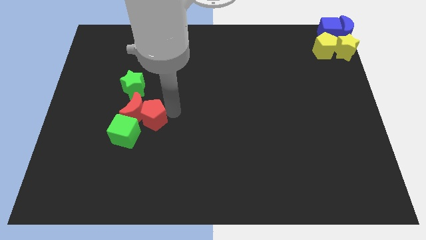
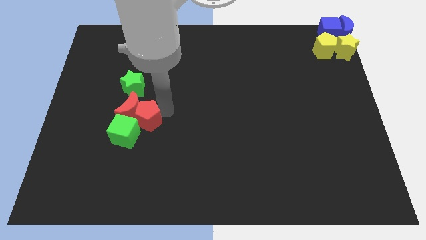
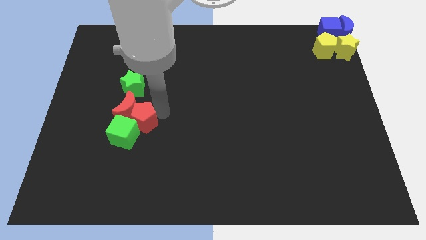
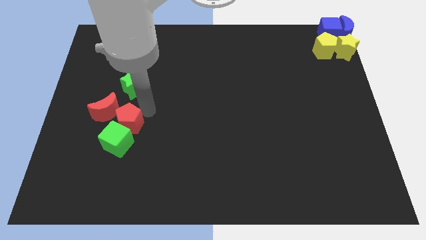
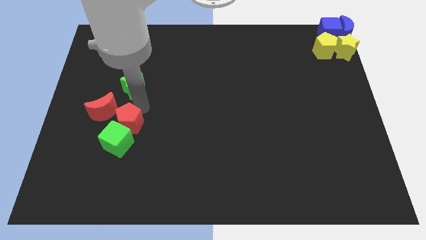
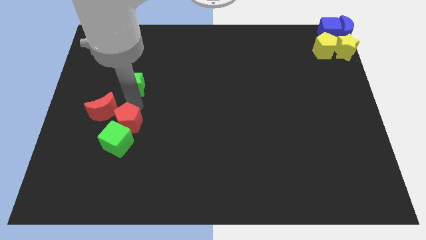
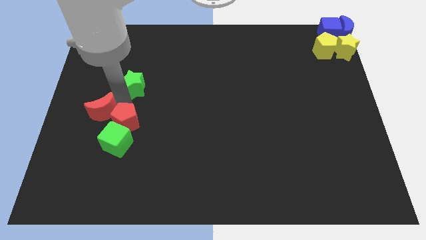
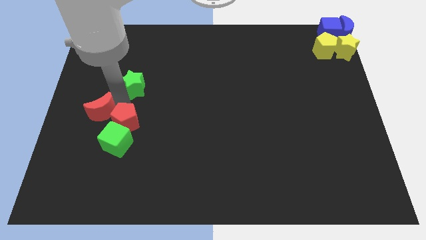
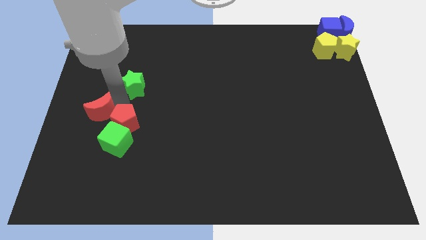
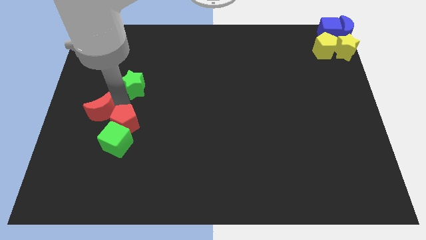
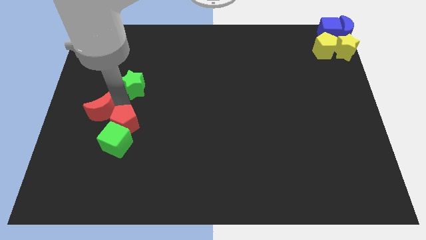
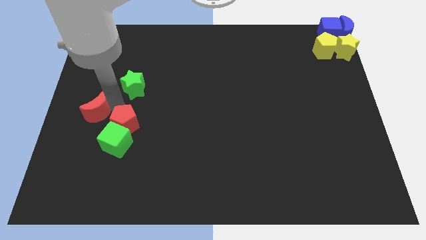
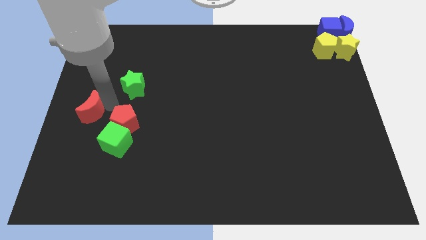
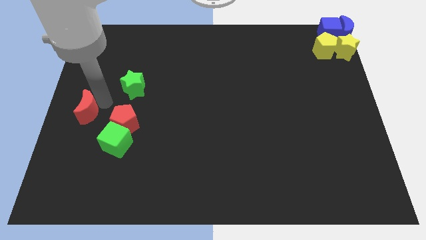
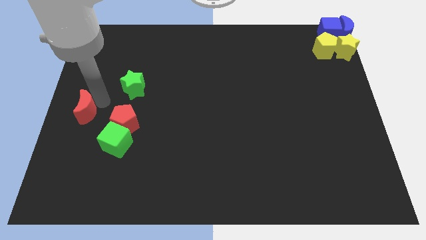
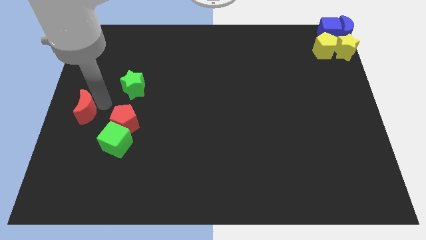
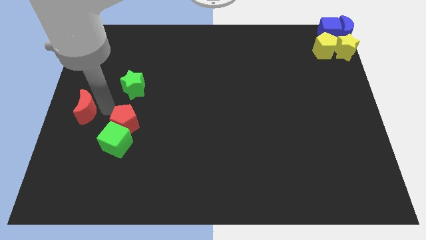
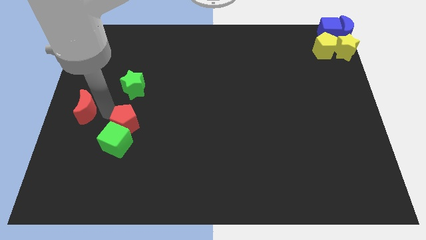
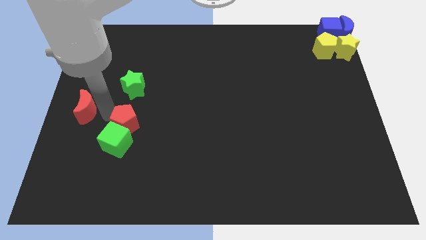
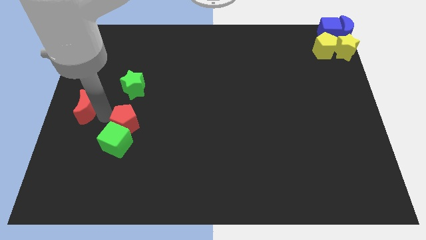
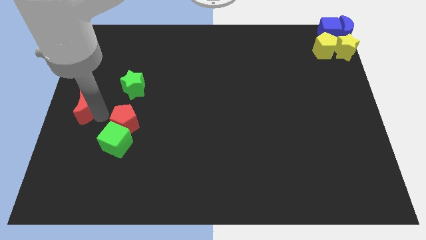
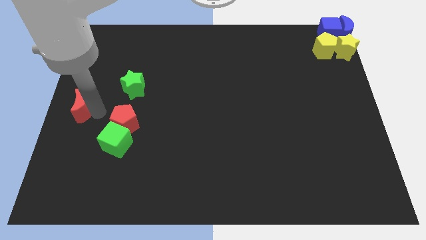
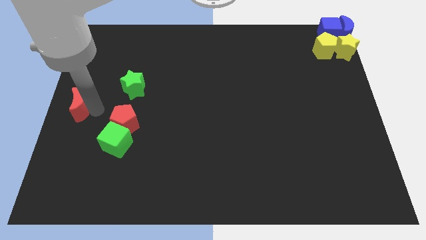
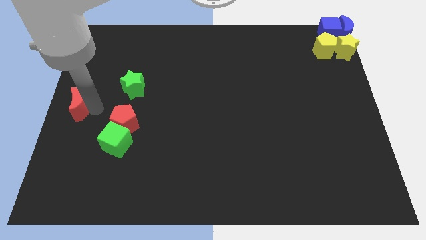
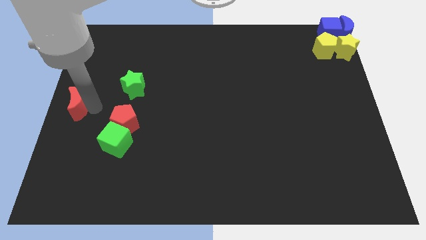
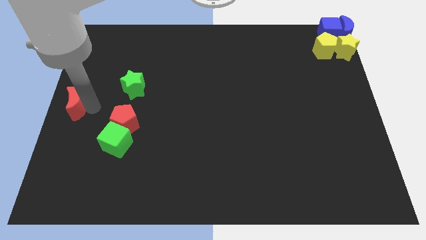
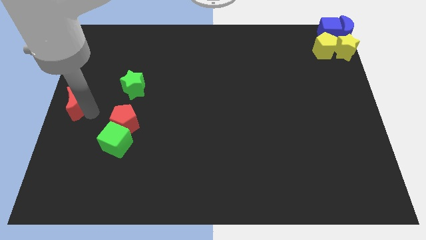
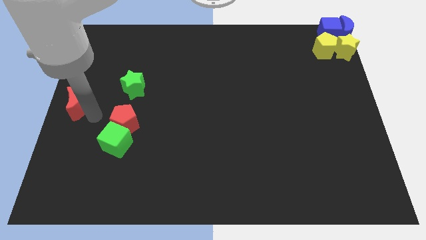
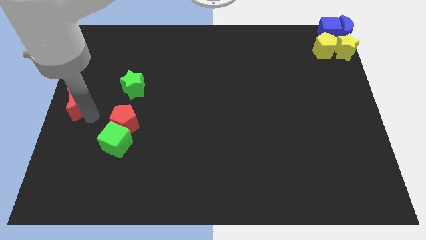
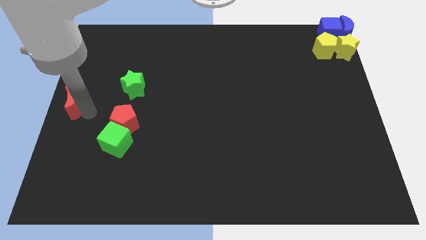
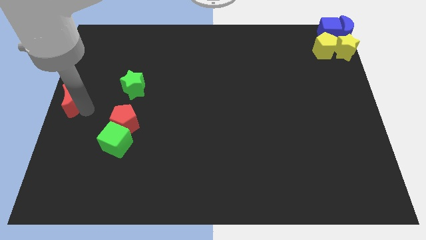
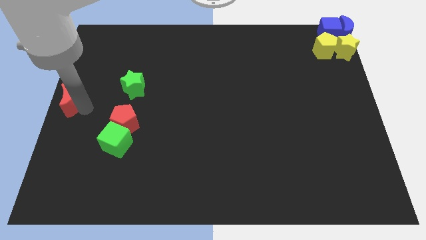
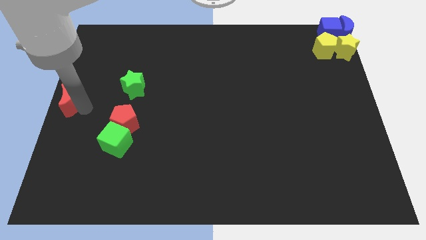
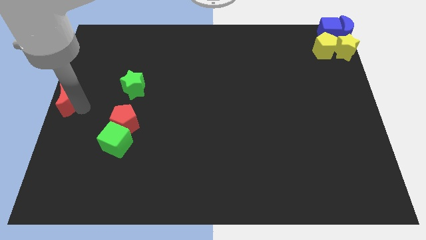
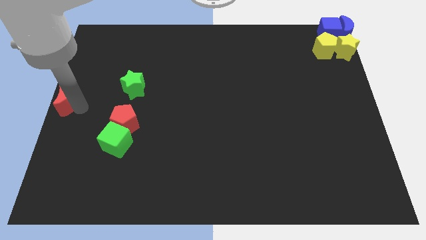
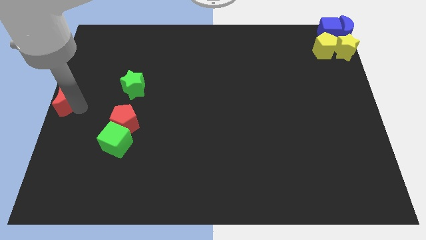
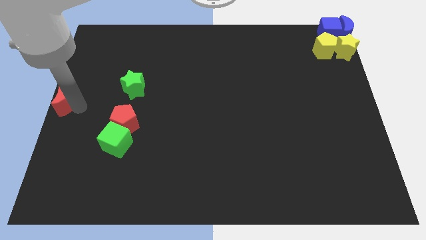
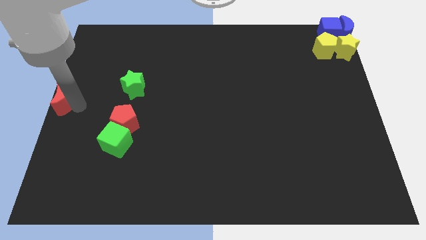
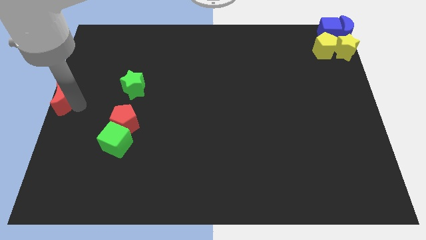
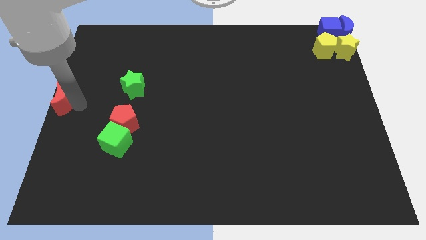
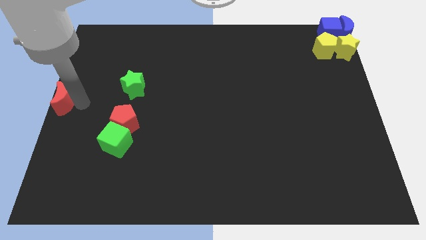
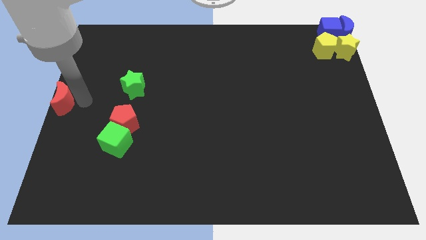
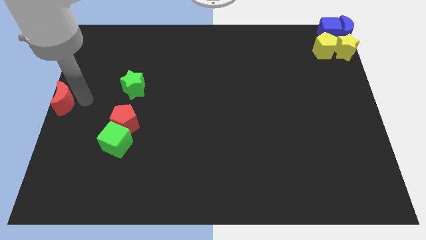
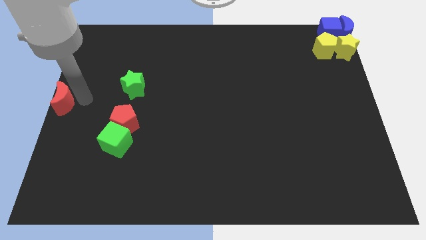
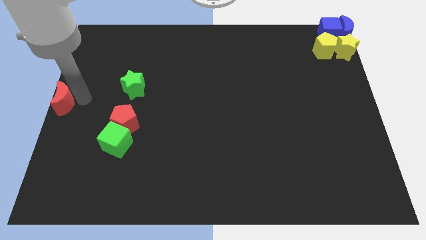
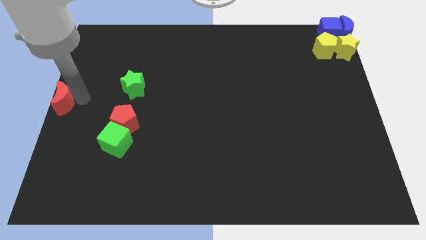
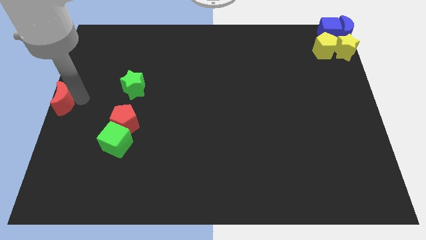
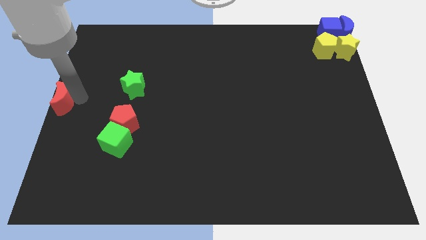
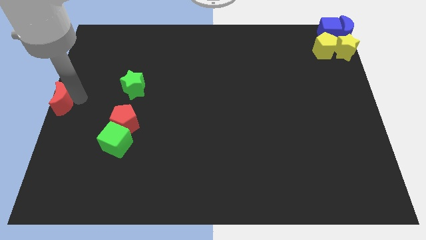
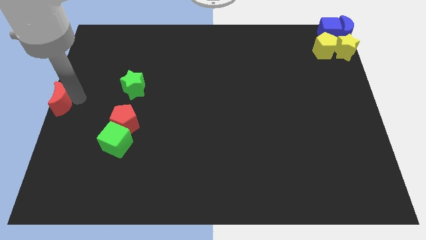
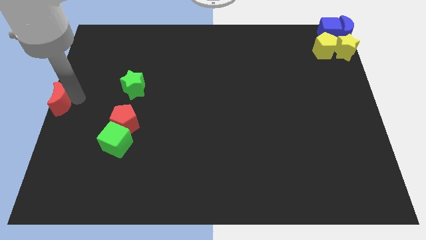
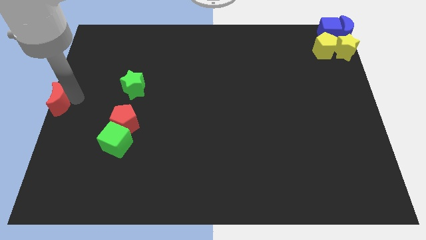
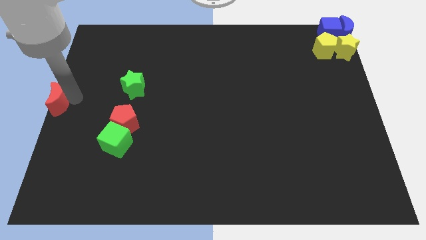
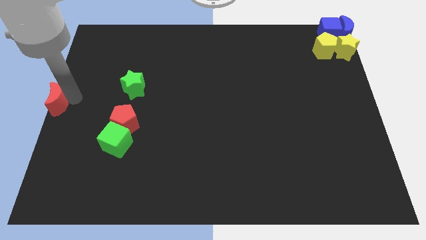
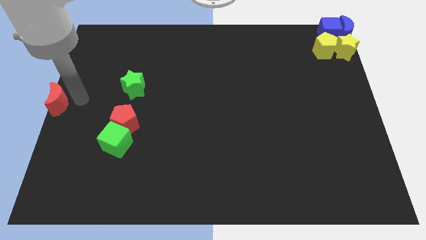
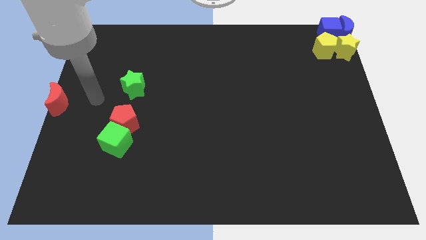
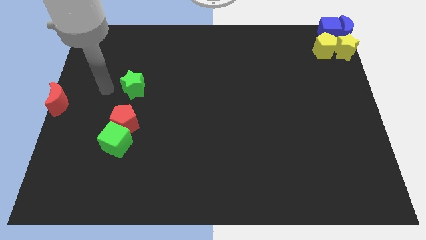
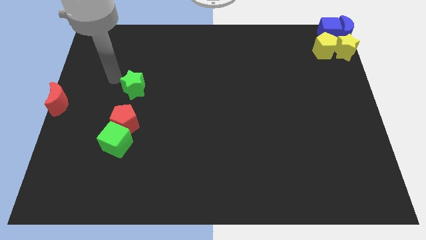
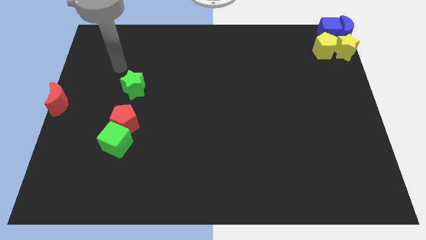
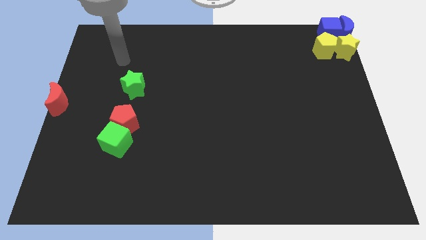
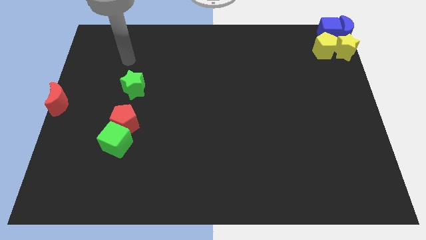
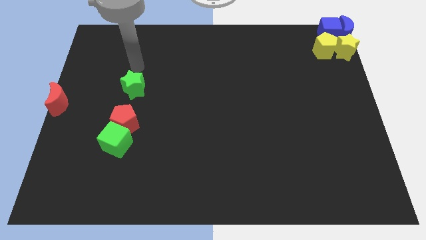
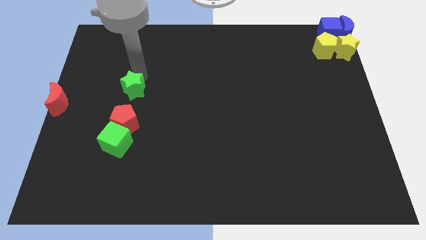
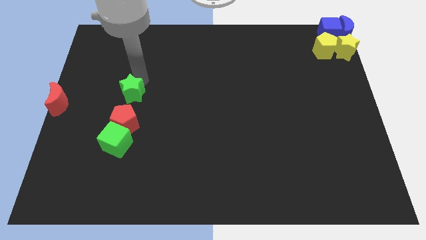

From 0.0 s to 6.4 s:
push the red moon to the left center of the board

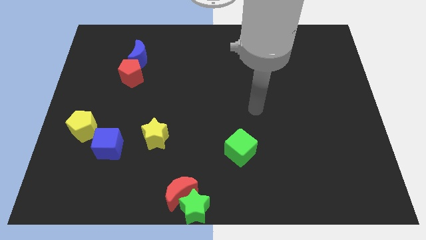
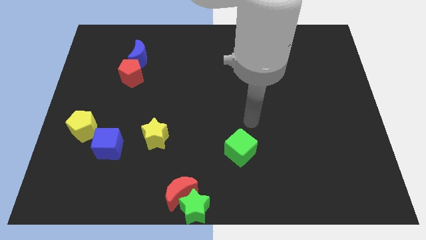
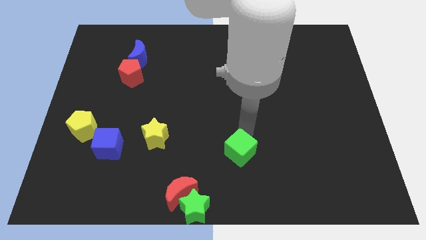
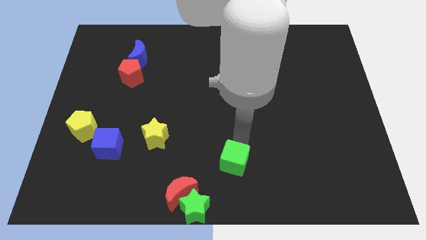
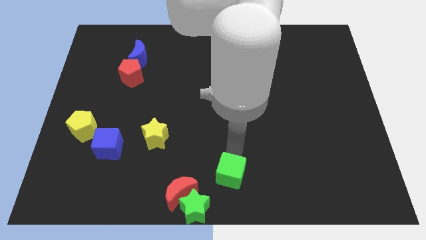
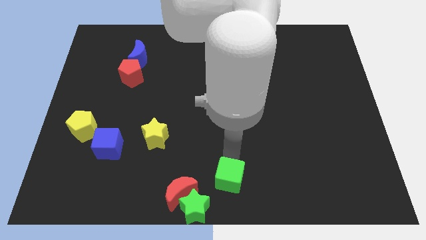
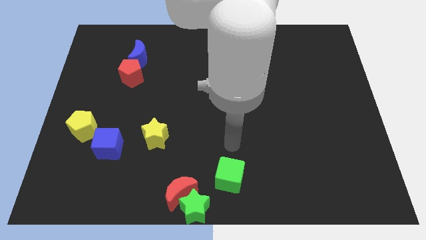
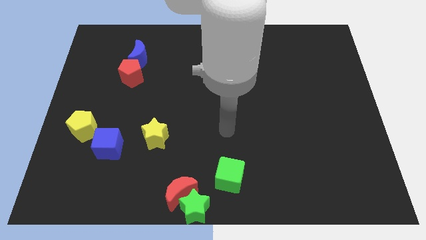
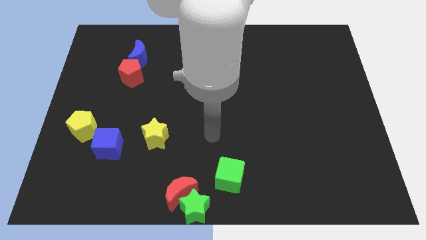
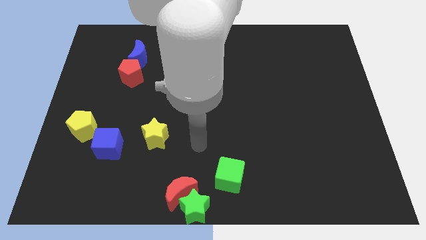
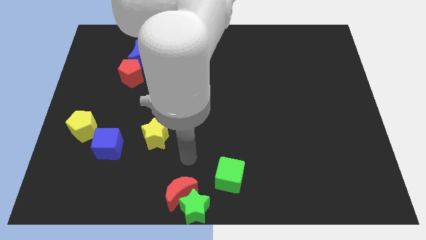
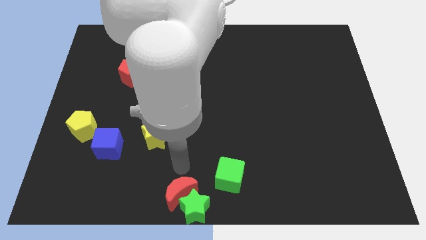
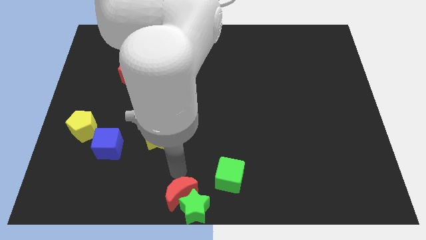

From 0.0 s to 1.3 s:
move the green cube to the bottom of the board

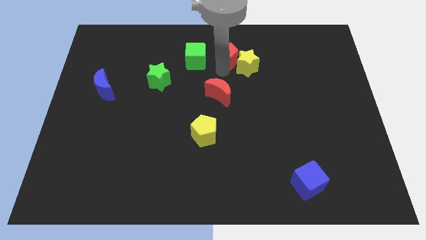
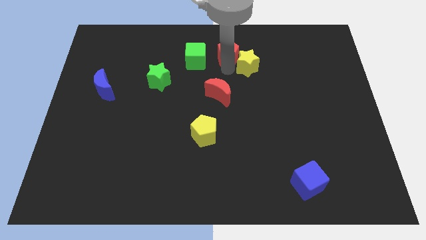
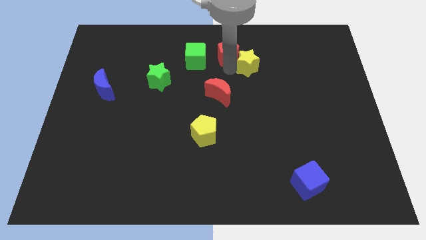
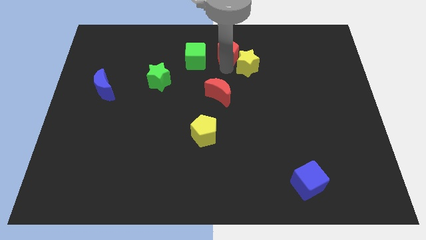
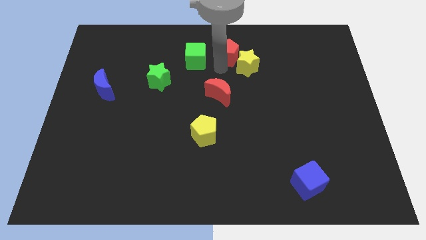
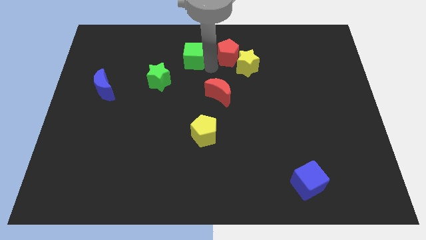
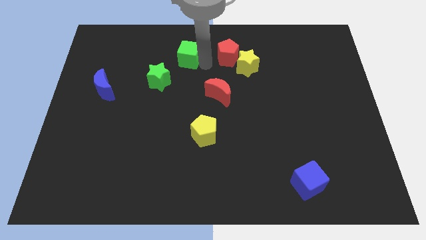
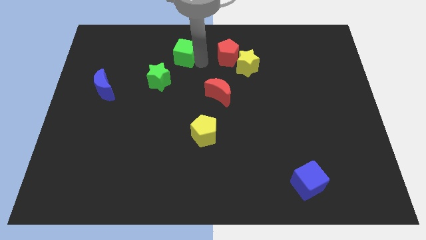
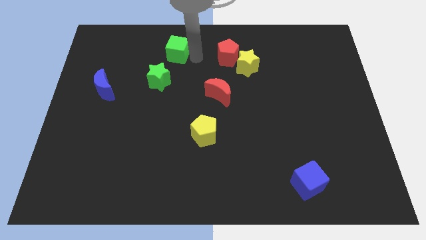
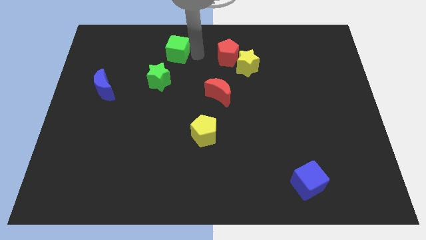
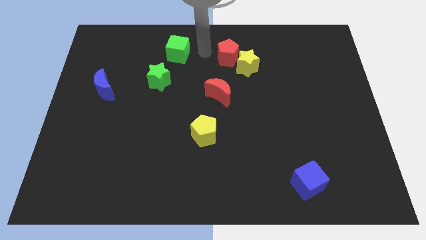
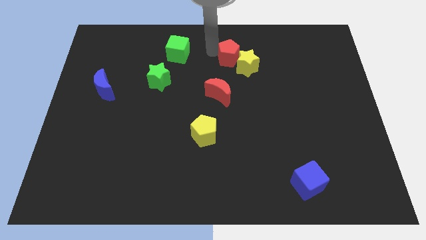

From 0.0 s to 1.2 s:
push the green cube slightly to the left
